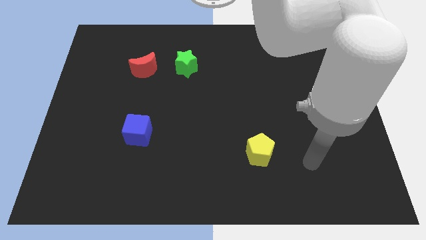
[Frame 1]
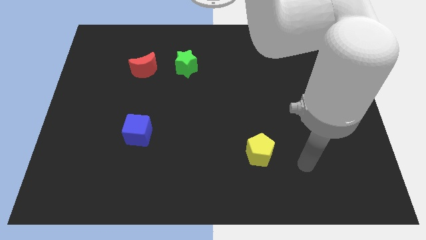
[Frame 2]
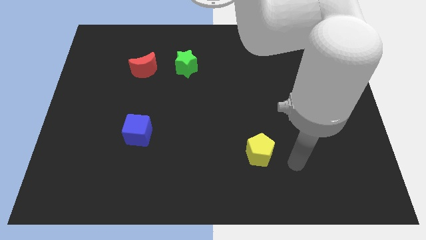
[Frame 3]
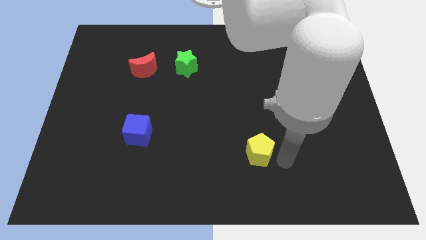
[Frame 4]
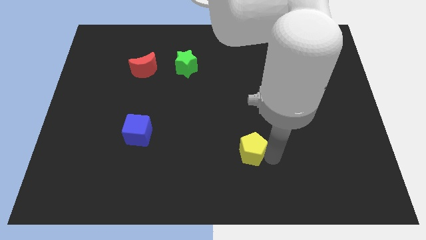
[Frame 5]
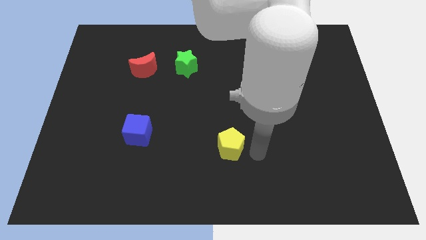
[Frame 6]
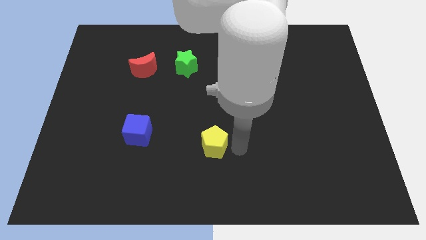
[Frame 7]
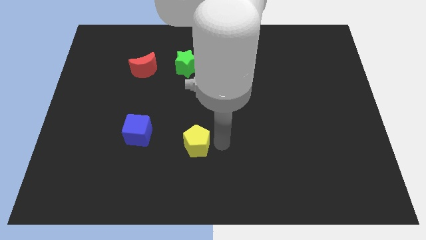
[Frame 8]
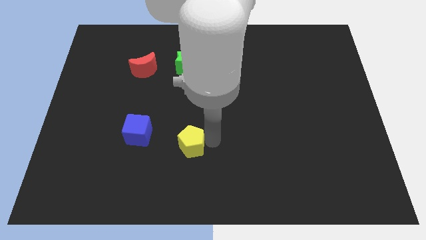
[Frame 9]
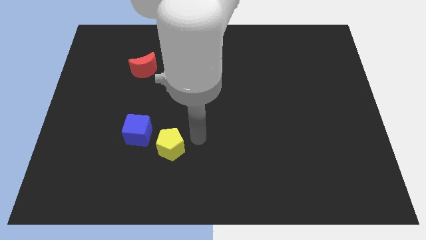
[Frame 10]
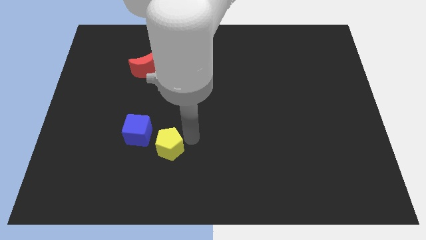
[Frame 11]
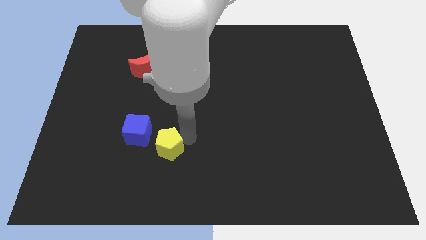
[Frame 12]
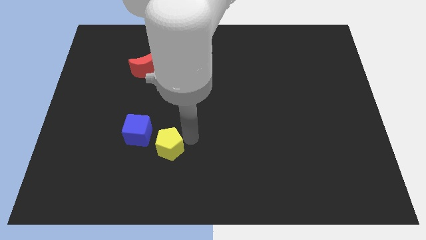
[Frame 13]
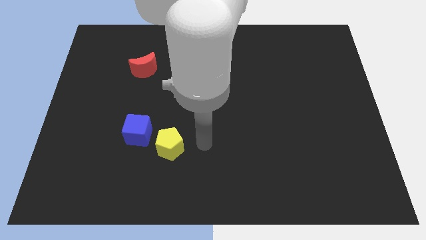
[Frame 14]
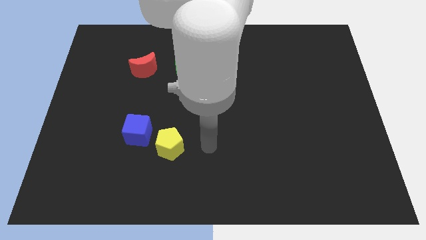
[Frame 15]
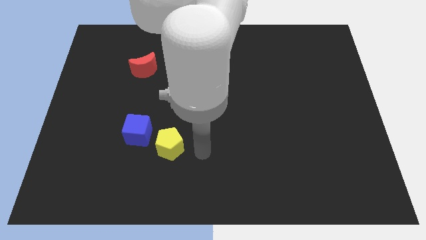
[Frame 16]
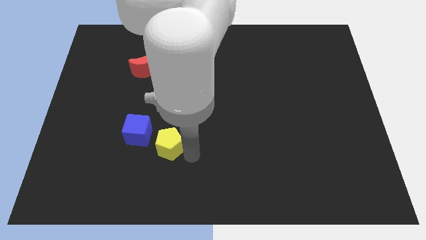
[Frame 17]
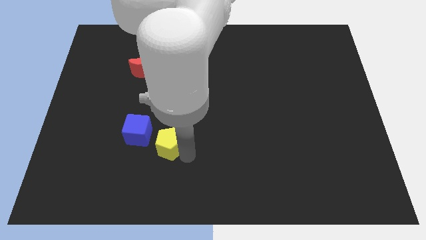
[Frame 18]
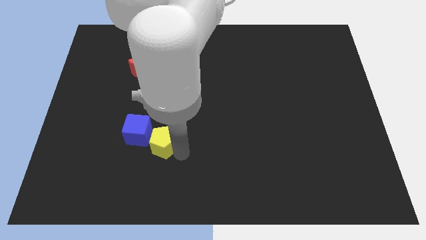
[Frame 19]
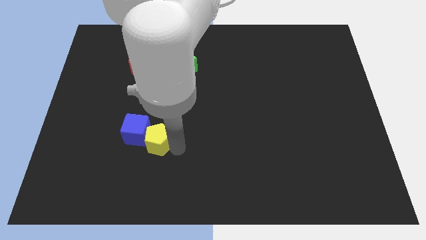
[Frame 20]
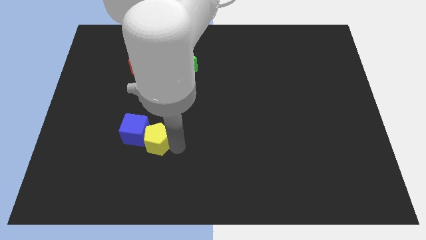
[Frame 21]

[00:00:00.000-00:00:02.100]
slide the pentagon to the blue block

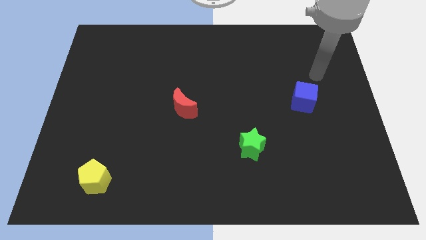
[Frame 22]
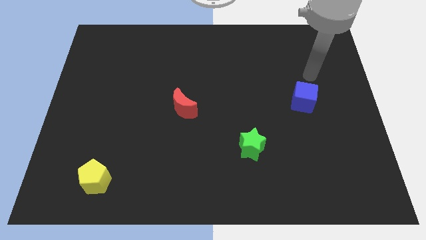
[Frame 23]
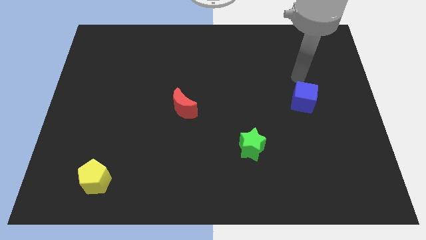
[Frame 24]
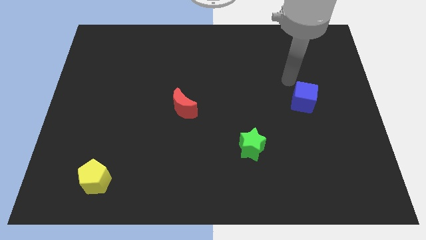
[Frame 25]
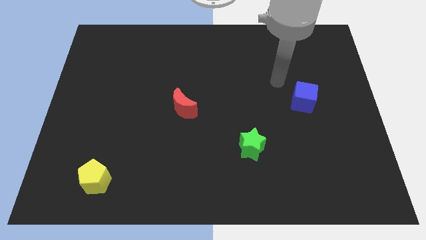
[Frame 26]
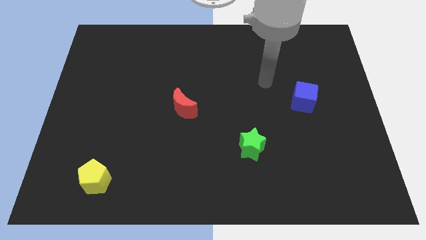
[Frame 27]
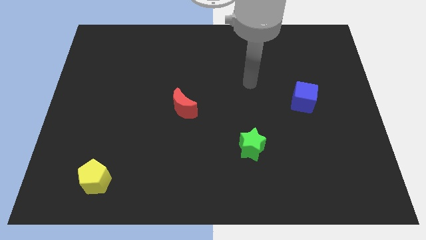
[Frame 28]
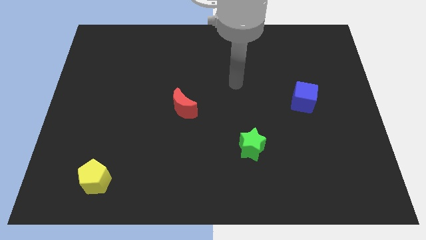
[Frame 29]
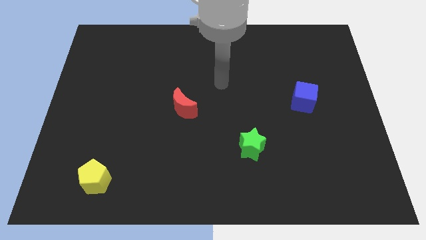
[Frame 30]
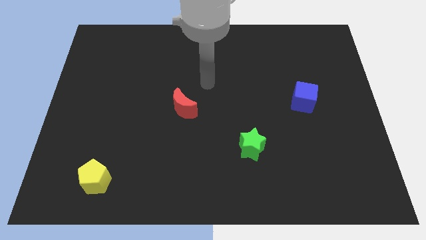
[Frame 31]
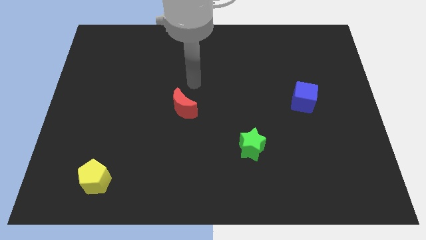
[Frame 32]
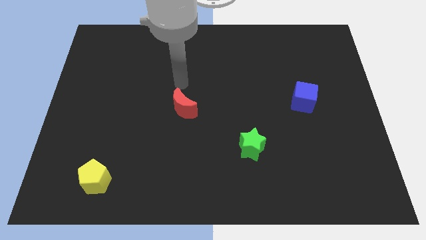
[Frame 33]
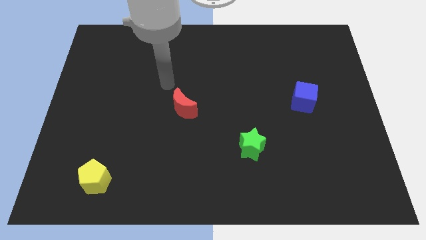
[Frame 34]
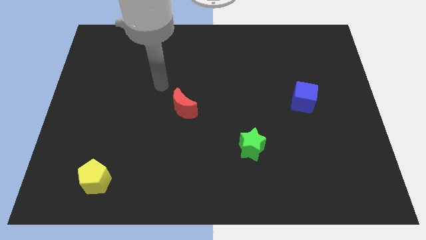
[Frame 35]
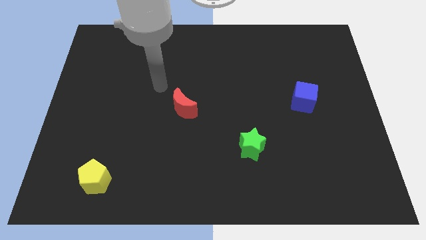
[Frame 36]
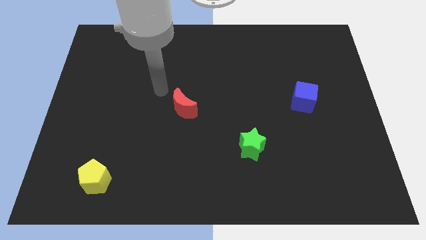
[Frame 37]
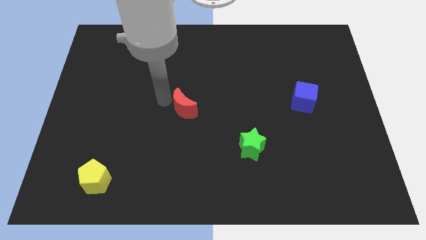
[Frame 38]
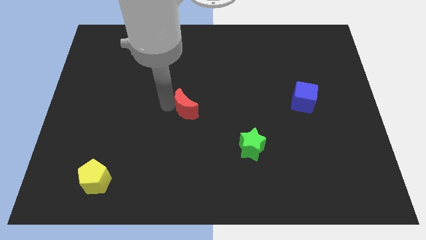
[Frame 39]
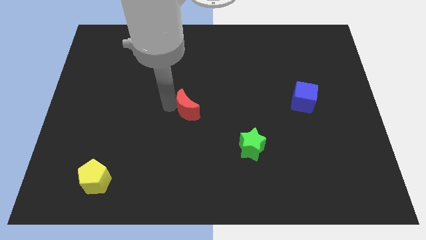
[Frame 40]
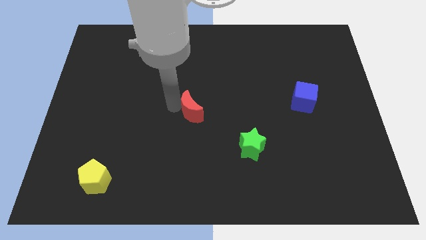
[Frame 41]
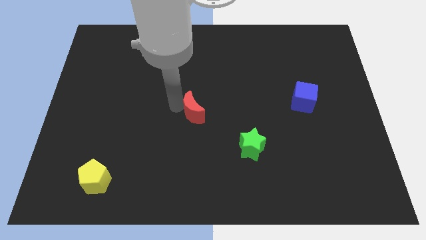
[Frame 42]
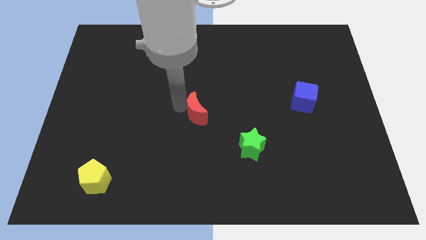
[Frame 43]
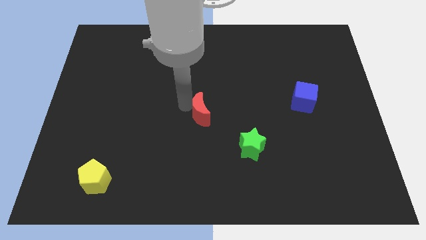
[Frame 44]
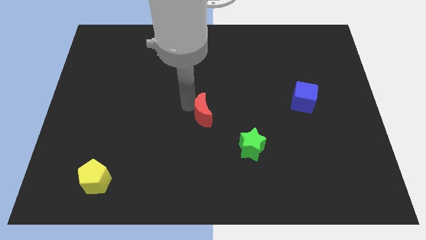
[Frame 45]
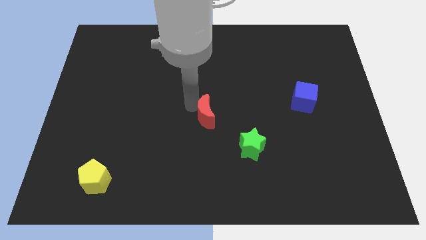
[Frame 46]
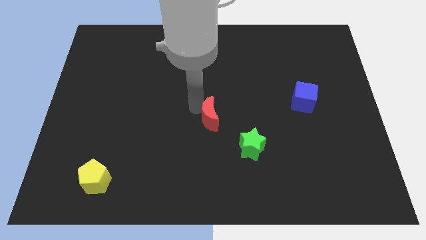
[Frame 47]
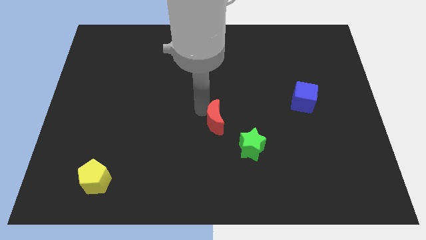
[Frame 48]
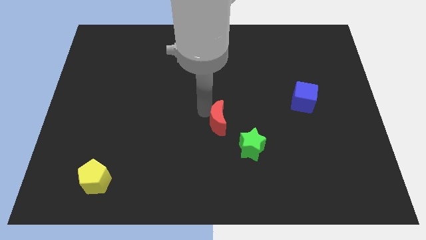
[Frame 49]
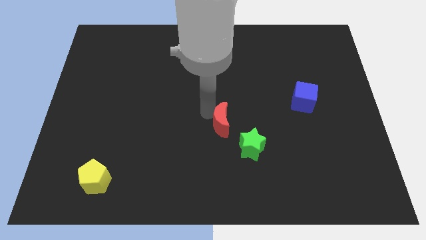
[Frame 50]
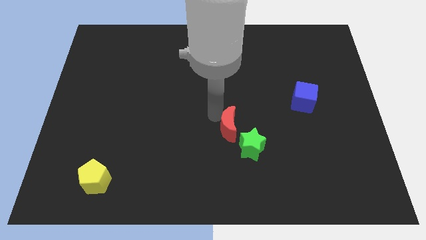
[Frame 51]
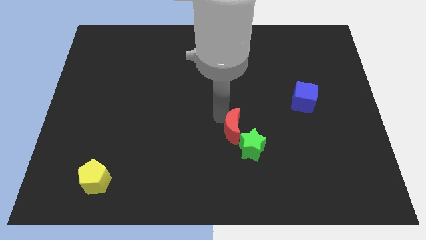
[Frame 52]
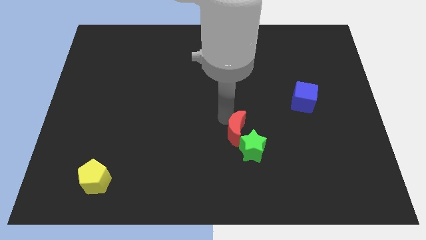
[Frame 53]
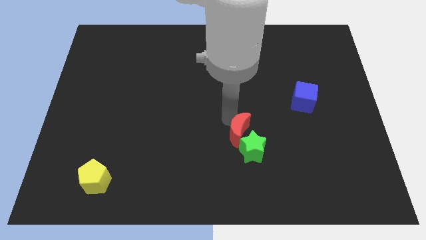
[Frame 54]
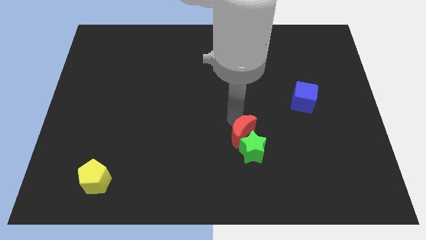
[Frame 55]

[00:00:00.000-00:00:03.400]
push the red block close to the green block

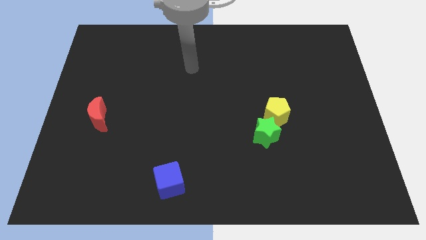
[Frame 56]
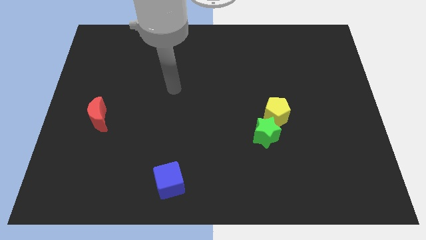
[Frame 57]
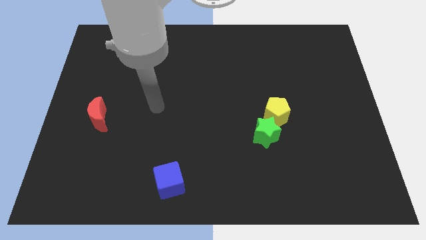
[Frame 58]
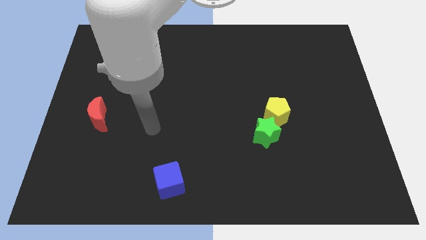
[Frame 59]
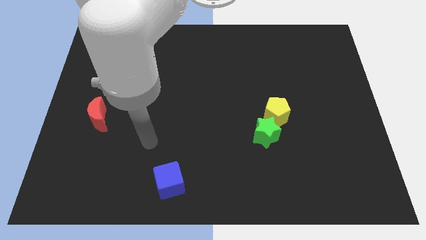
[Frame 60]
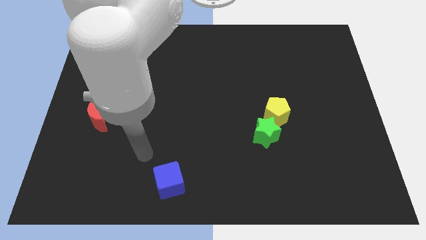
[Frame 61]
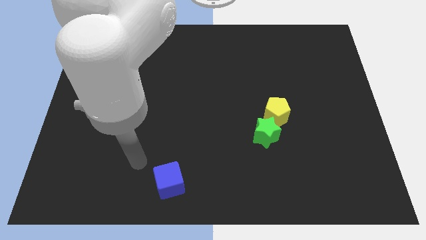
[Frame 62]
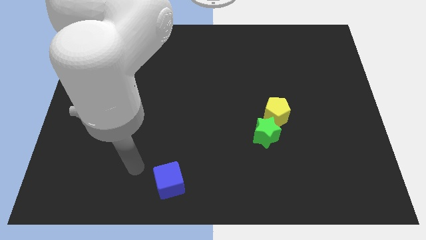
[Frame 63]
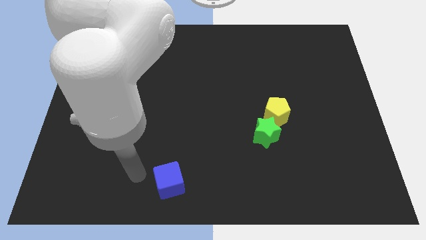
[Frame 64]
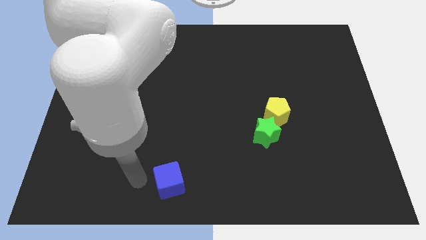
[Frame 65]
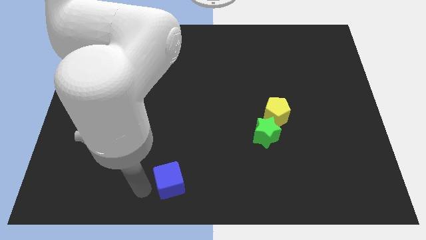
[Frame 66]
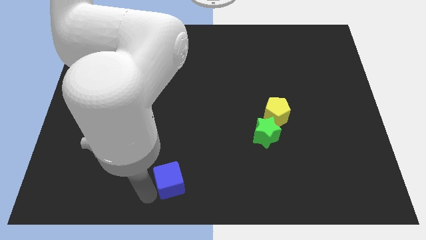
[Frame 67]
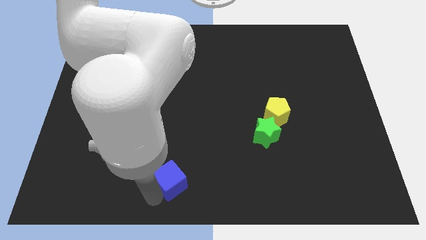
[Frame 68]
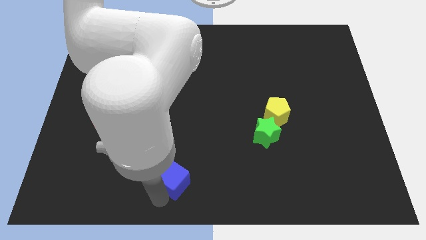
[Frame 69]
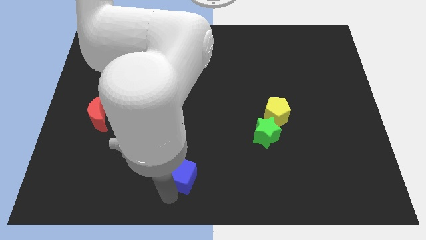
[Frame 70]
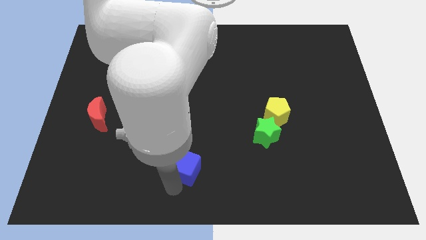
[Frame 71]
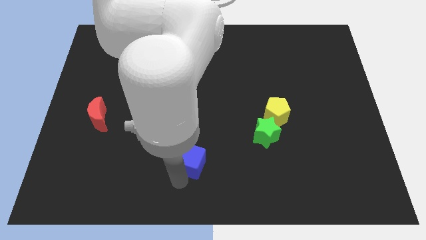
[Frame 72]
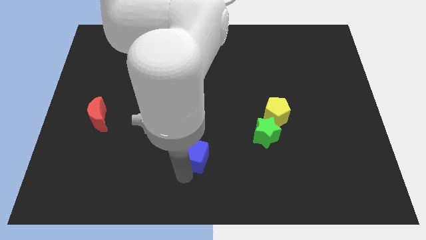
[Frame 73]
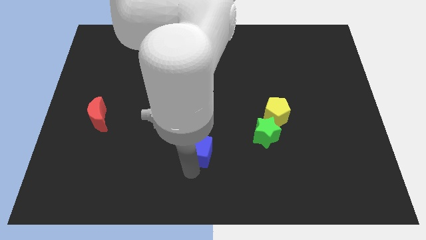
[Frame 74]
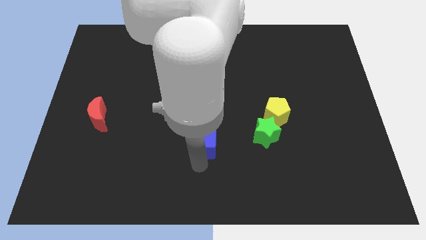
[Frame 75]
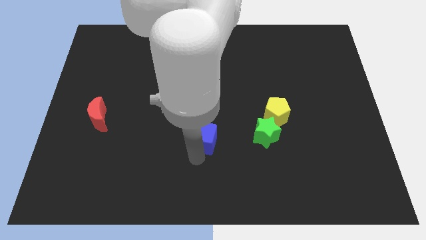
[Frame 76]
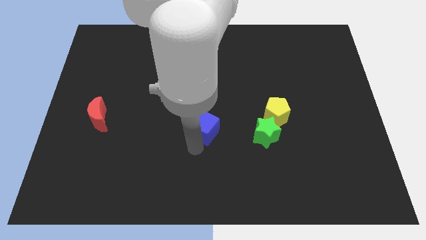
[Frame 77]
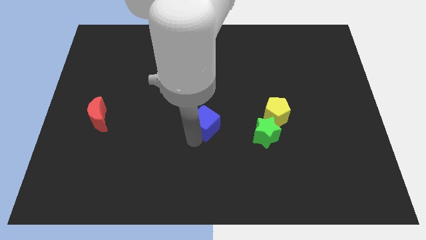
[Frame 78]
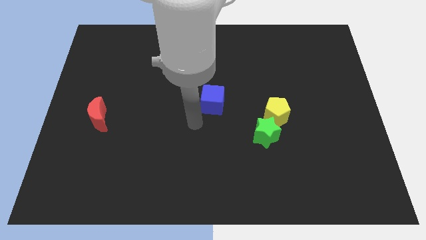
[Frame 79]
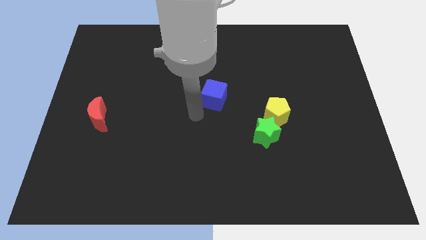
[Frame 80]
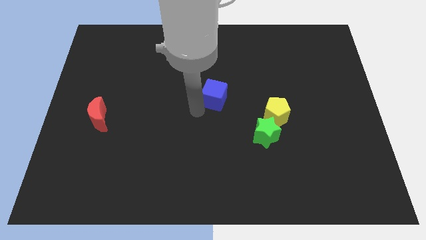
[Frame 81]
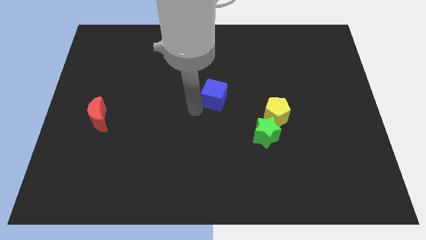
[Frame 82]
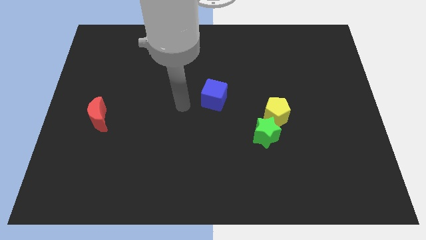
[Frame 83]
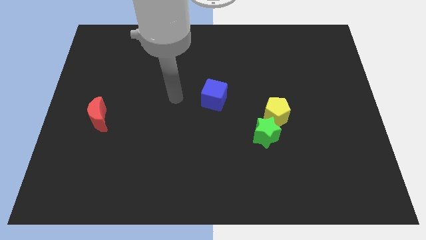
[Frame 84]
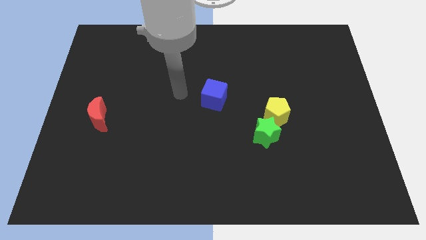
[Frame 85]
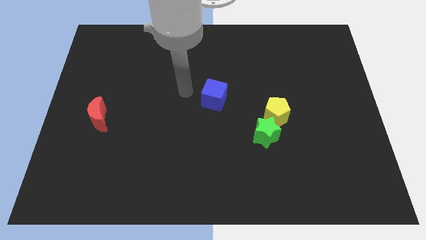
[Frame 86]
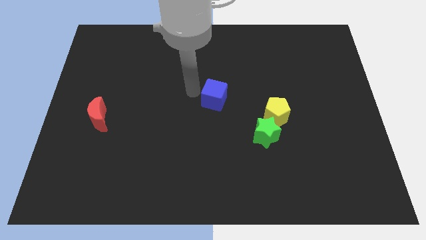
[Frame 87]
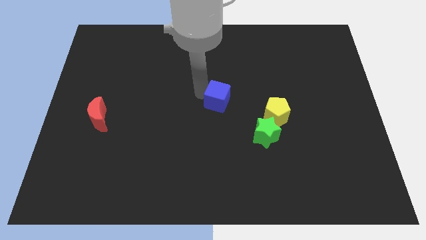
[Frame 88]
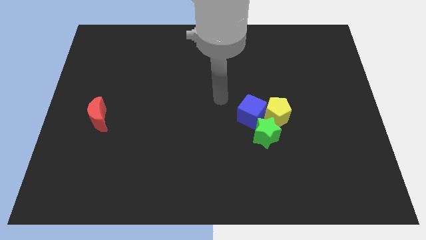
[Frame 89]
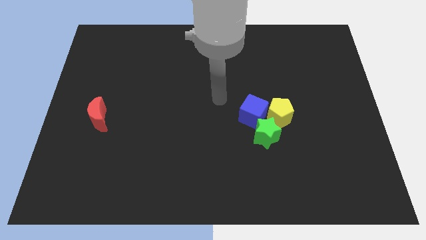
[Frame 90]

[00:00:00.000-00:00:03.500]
slide the blue block next to the pentagon
